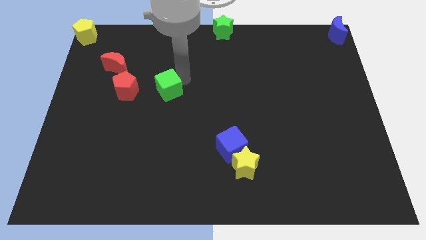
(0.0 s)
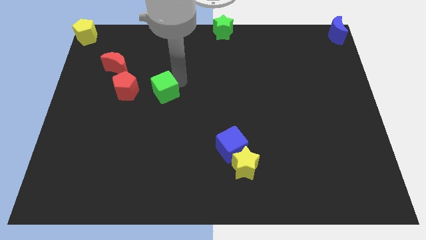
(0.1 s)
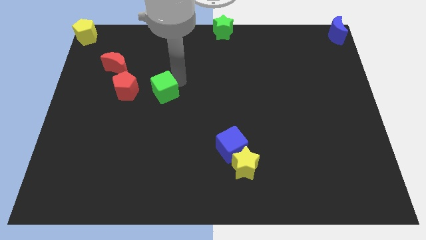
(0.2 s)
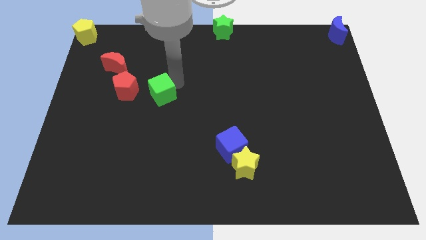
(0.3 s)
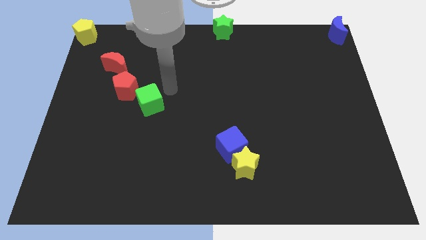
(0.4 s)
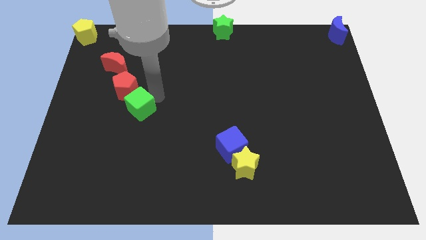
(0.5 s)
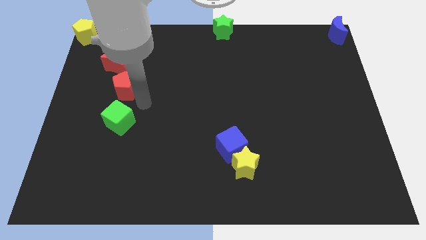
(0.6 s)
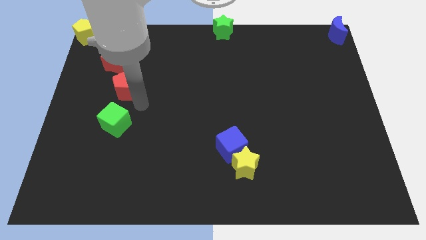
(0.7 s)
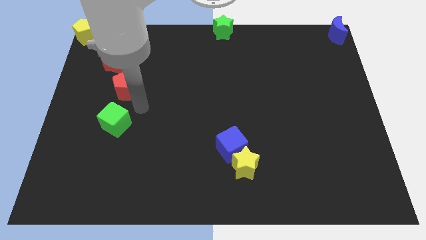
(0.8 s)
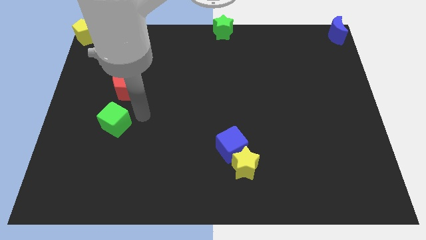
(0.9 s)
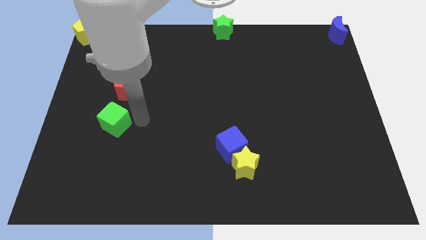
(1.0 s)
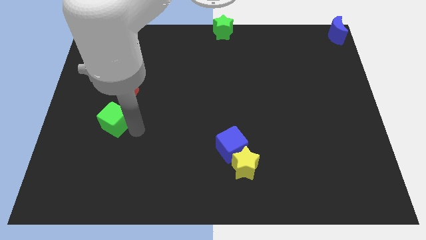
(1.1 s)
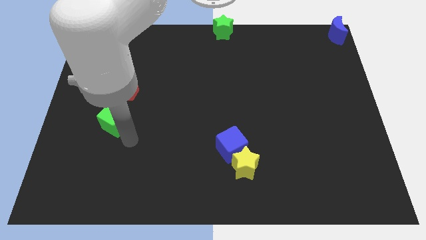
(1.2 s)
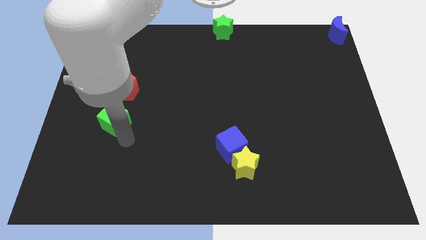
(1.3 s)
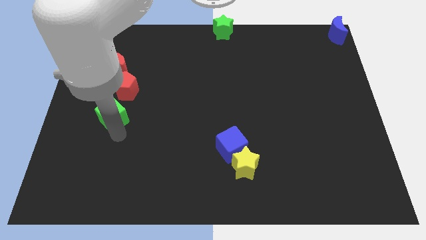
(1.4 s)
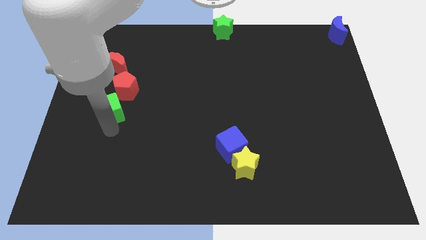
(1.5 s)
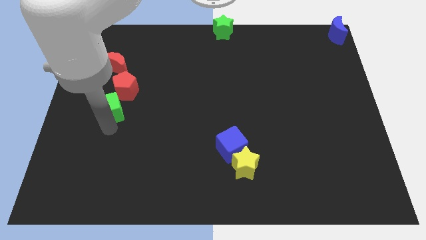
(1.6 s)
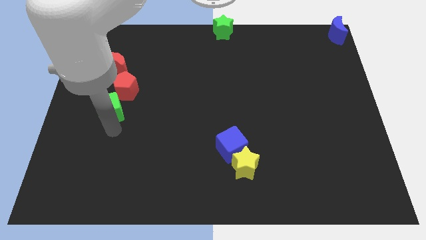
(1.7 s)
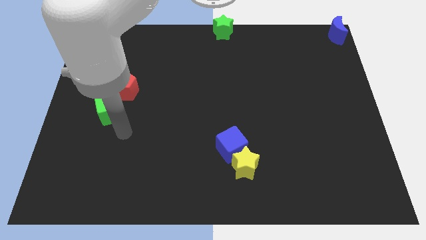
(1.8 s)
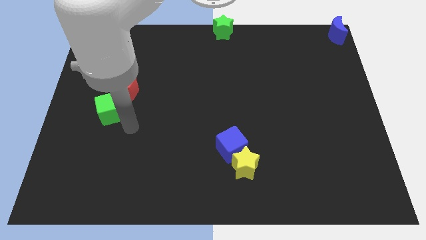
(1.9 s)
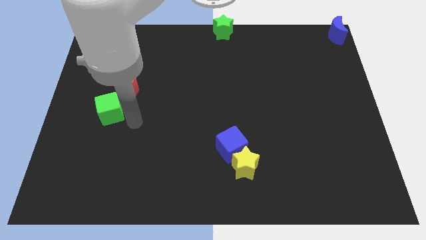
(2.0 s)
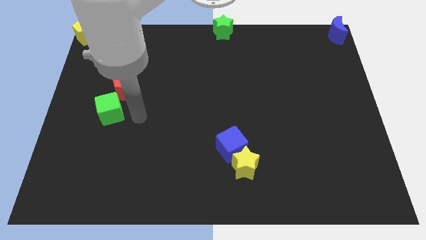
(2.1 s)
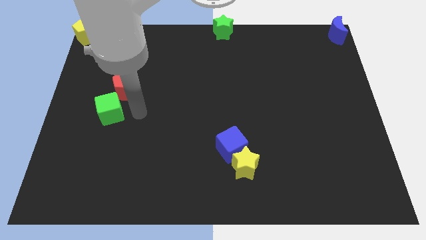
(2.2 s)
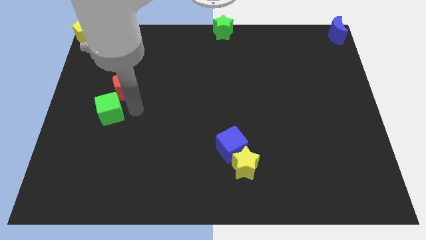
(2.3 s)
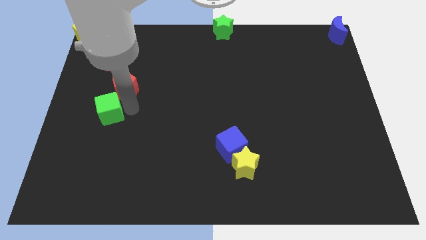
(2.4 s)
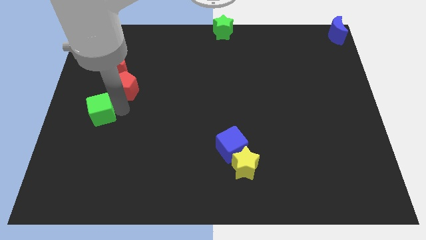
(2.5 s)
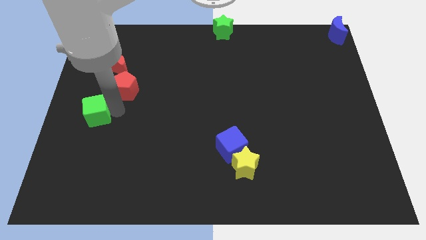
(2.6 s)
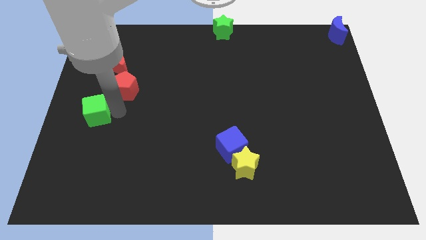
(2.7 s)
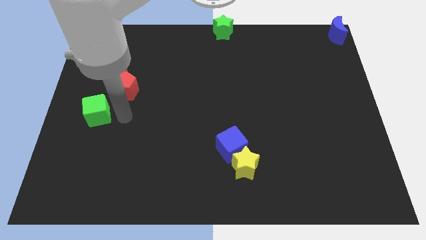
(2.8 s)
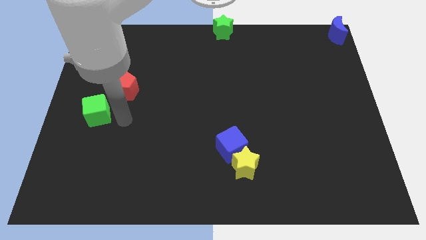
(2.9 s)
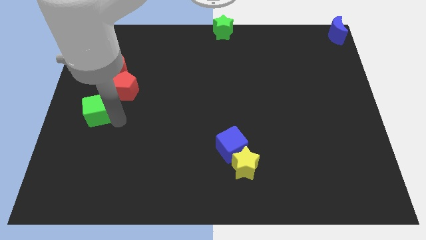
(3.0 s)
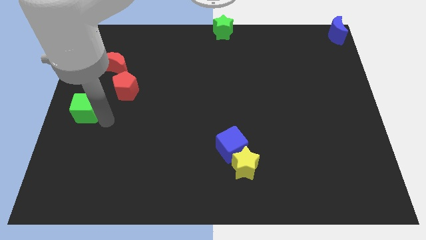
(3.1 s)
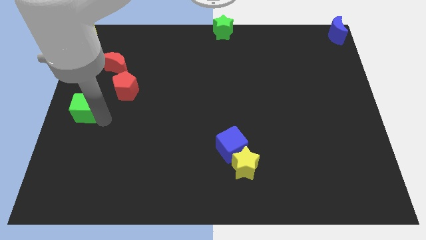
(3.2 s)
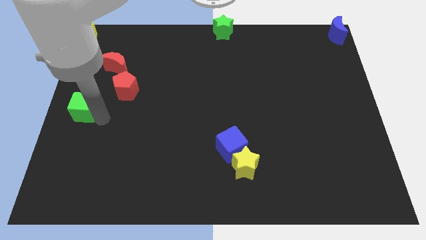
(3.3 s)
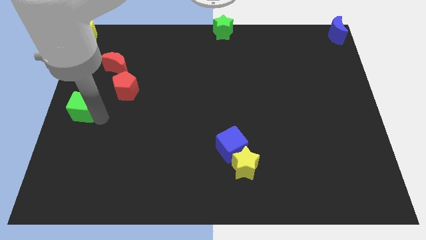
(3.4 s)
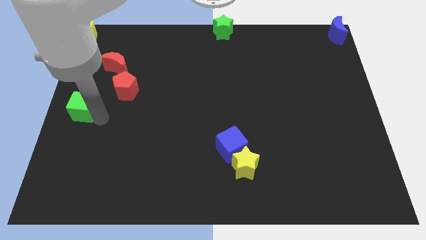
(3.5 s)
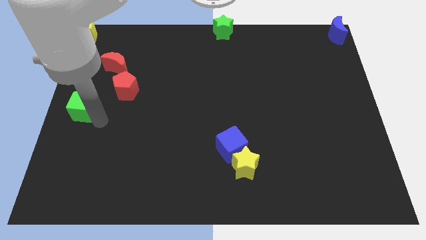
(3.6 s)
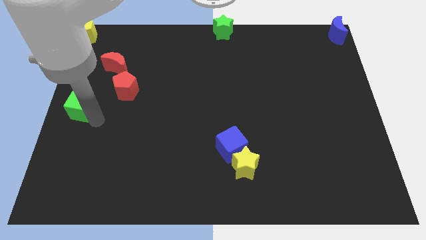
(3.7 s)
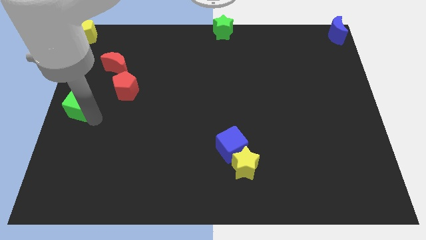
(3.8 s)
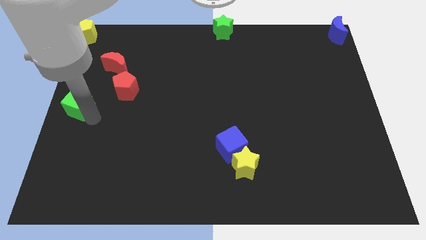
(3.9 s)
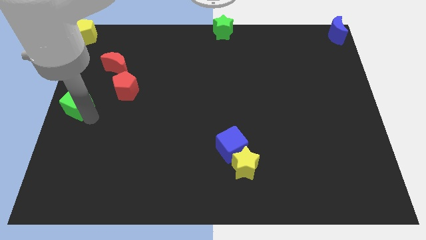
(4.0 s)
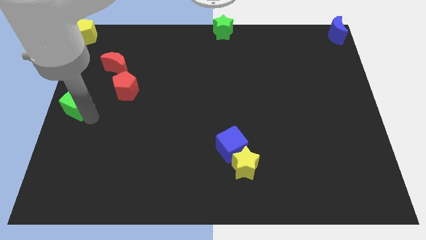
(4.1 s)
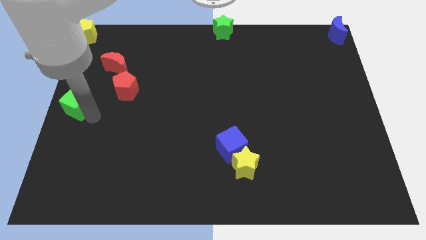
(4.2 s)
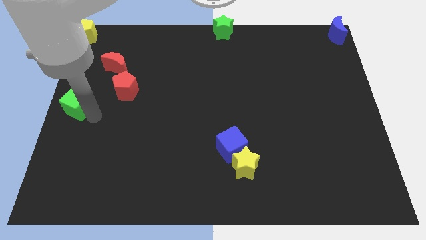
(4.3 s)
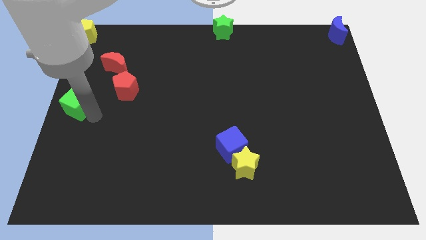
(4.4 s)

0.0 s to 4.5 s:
place the green cube to the center left of the board

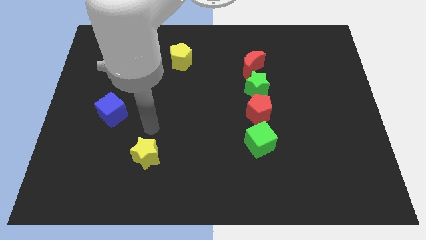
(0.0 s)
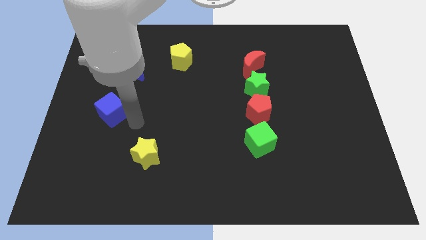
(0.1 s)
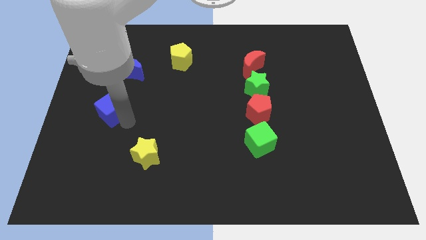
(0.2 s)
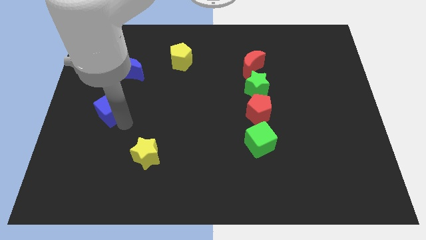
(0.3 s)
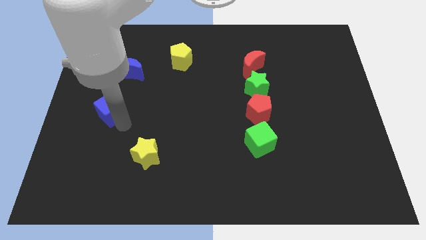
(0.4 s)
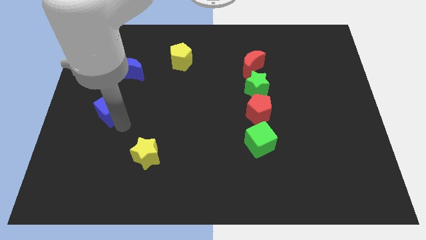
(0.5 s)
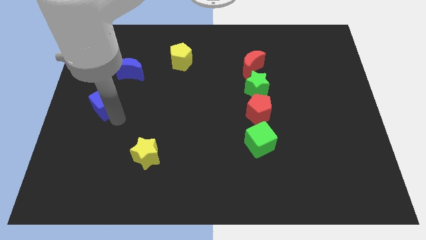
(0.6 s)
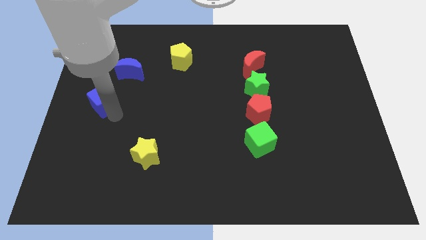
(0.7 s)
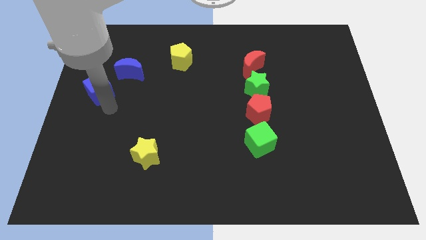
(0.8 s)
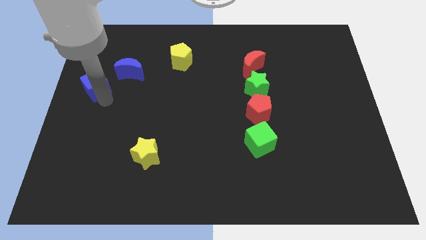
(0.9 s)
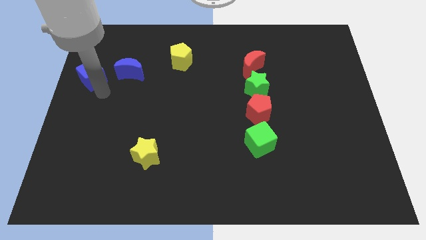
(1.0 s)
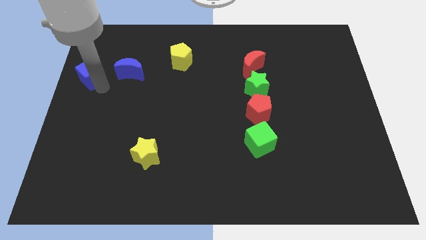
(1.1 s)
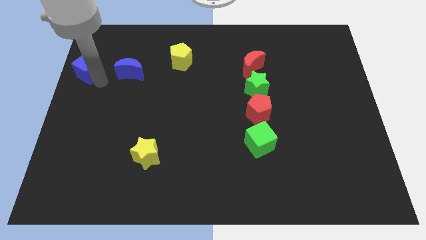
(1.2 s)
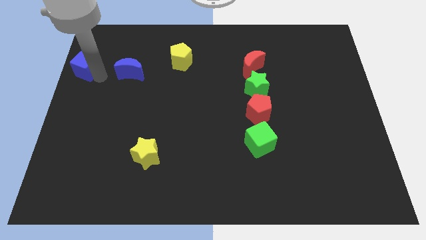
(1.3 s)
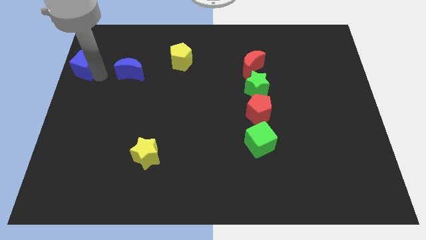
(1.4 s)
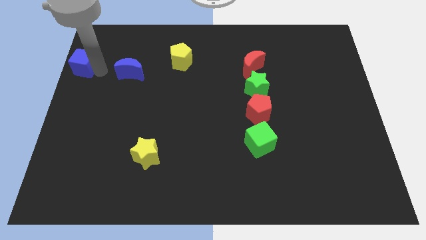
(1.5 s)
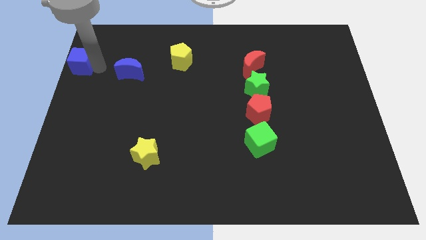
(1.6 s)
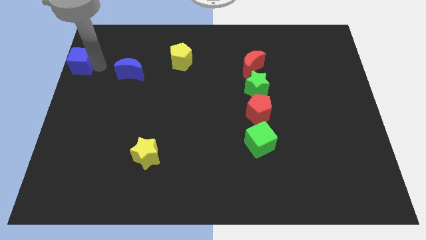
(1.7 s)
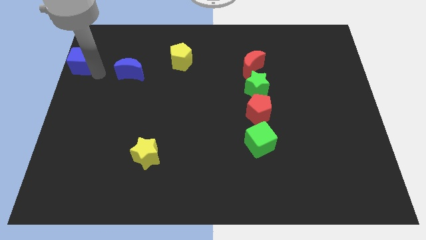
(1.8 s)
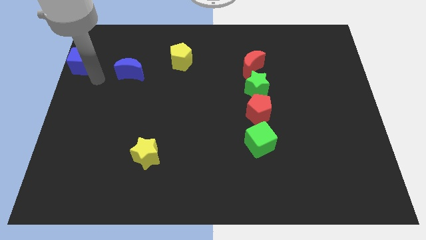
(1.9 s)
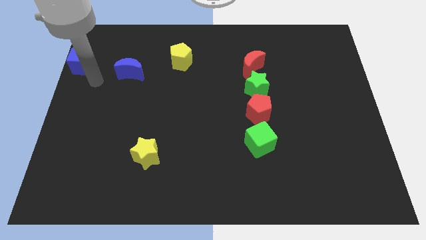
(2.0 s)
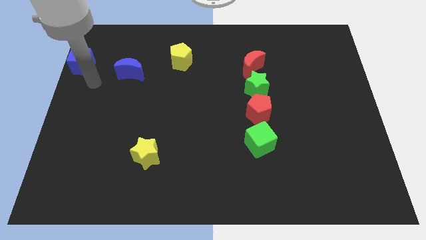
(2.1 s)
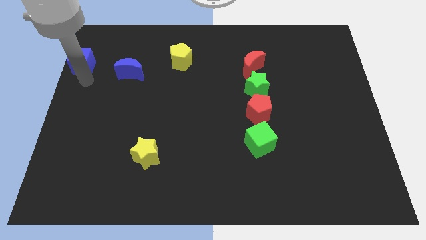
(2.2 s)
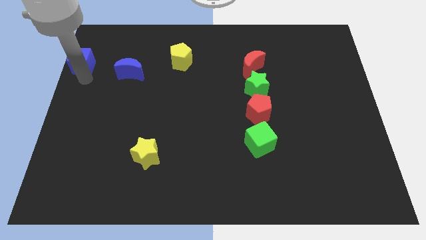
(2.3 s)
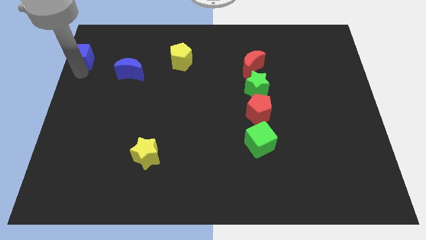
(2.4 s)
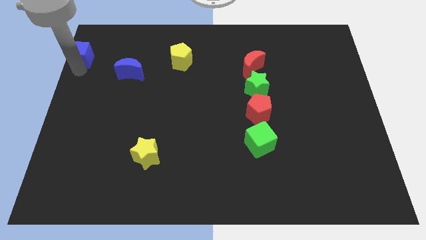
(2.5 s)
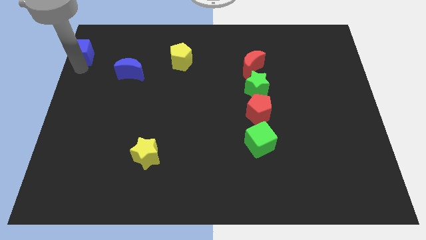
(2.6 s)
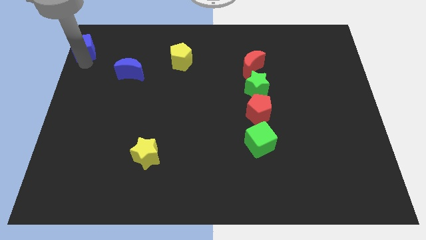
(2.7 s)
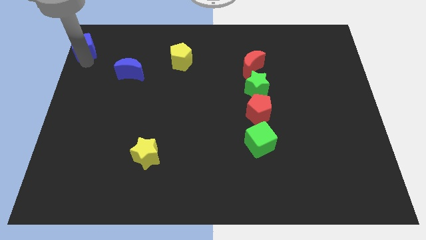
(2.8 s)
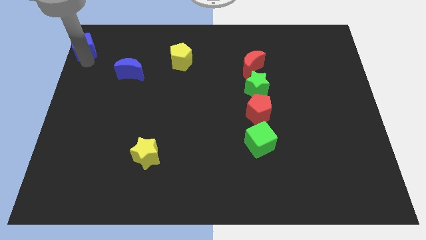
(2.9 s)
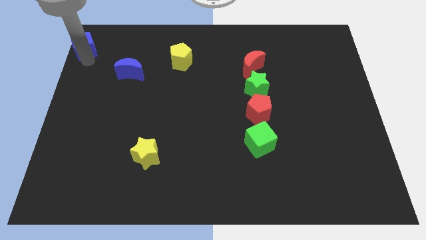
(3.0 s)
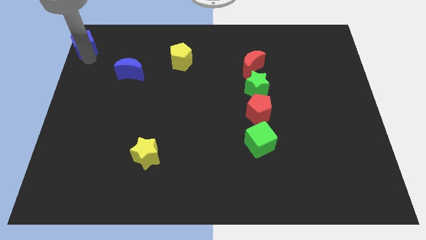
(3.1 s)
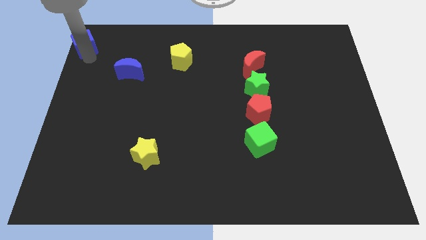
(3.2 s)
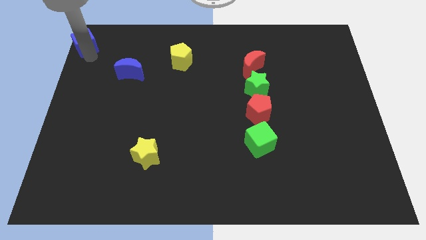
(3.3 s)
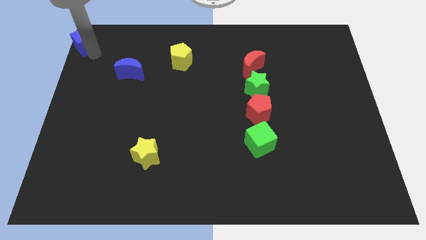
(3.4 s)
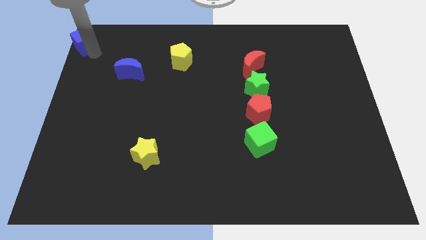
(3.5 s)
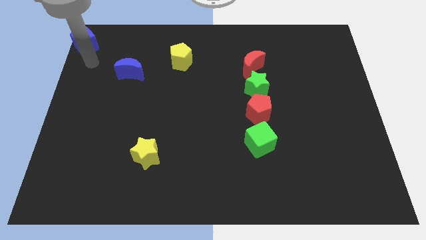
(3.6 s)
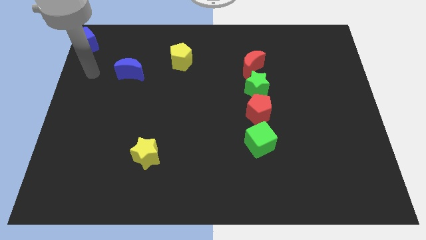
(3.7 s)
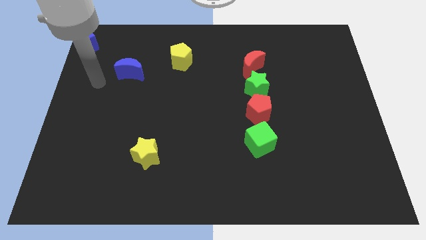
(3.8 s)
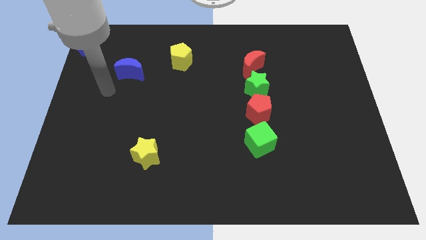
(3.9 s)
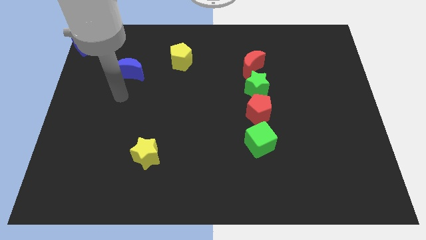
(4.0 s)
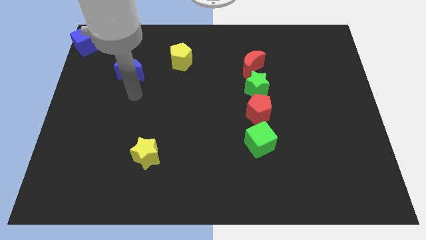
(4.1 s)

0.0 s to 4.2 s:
place the blue cube at the top left corner of the board

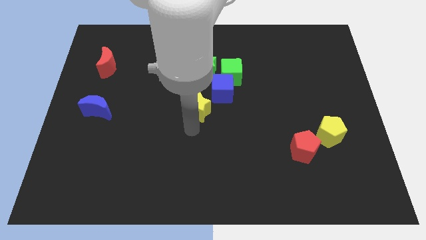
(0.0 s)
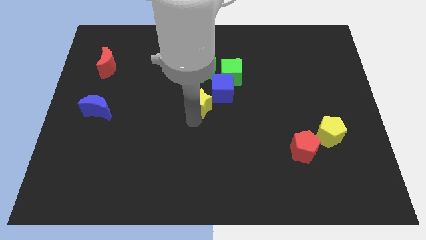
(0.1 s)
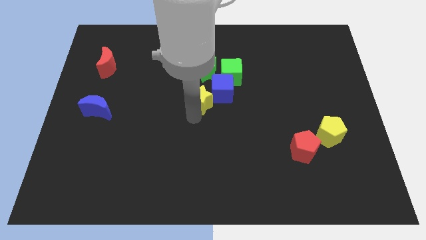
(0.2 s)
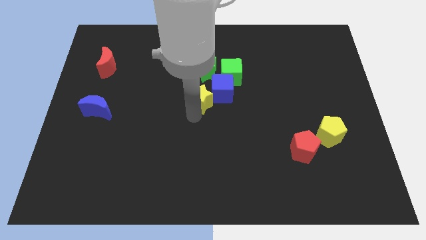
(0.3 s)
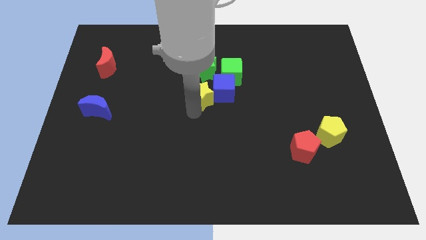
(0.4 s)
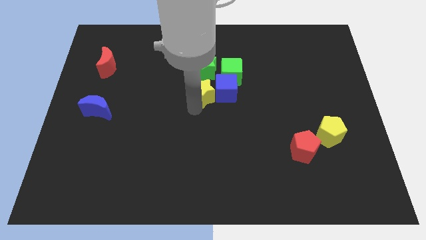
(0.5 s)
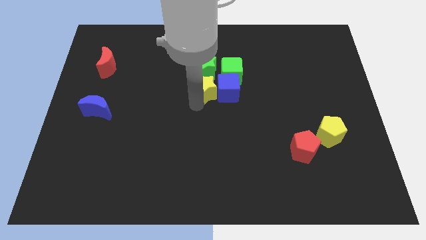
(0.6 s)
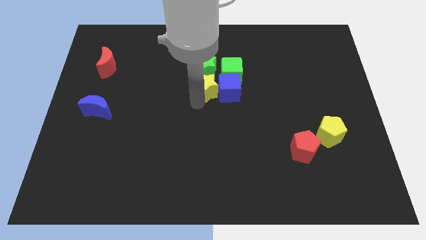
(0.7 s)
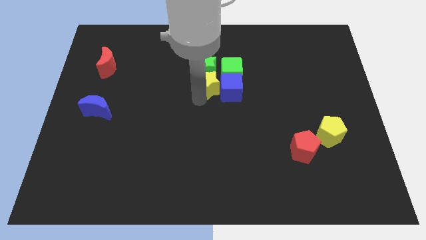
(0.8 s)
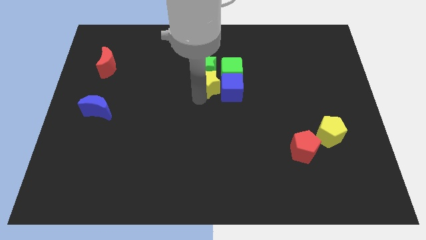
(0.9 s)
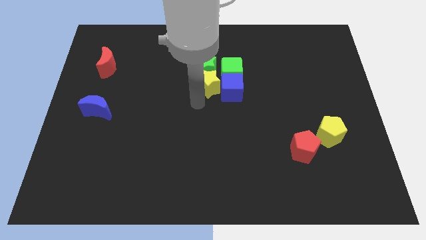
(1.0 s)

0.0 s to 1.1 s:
push yellow star in to green star
